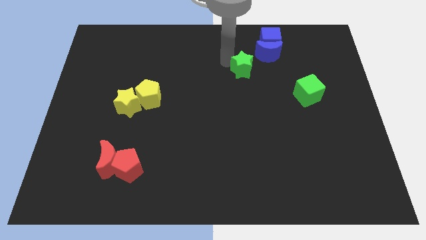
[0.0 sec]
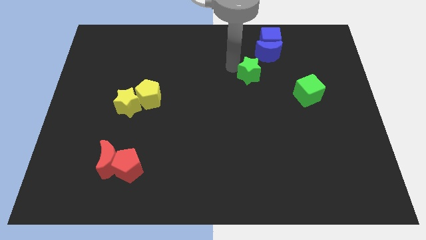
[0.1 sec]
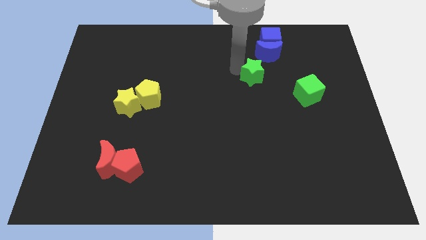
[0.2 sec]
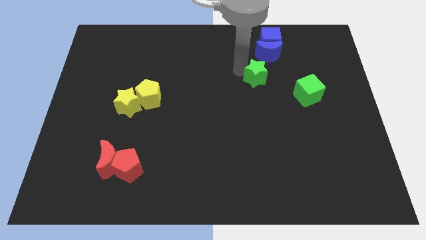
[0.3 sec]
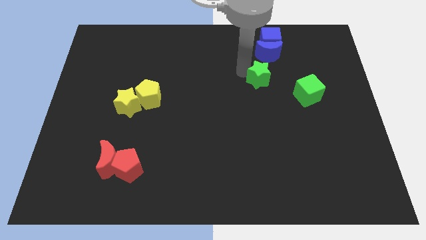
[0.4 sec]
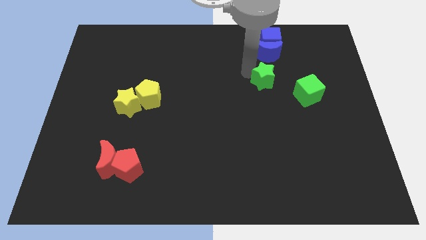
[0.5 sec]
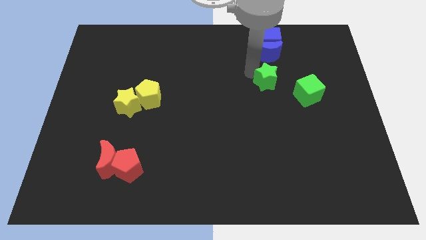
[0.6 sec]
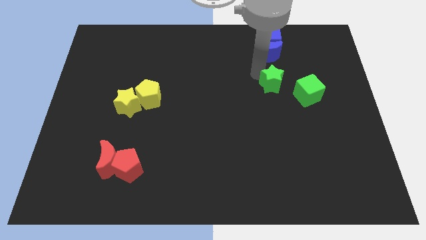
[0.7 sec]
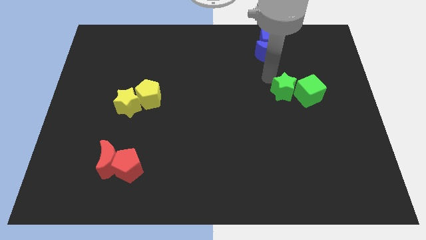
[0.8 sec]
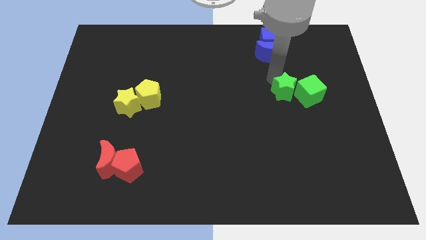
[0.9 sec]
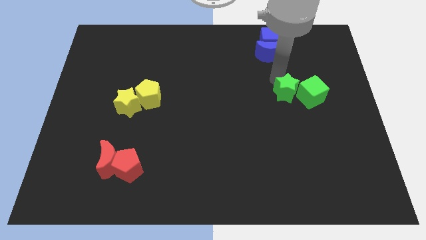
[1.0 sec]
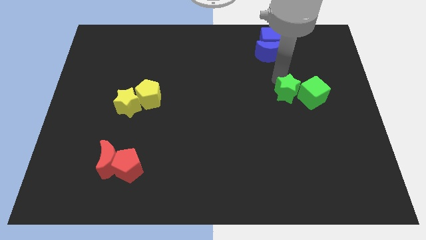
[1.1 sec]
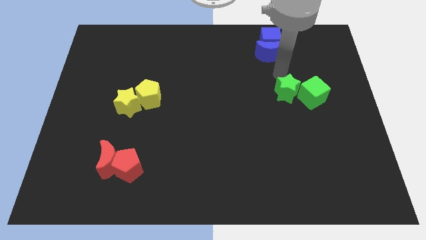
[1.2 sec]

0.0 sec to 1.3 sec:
arrange the green star at the left side of the green cube

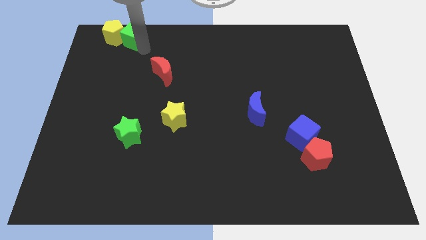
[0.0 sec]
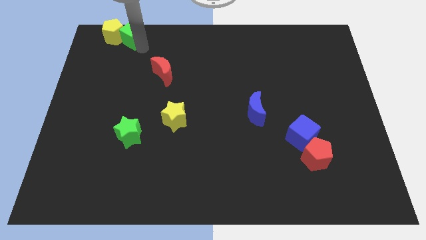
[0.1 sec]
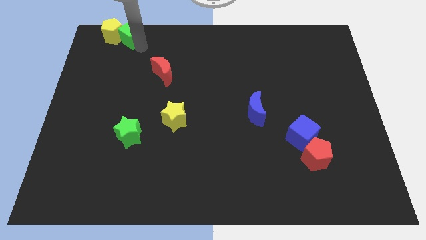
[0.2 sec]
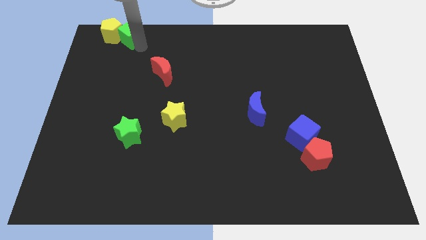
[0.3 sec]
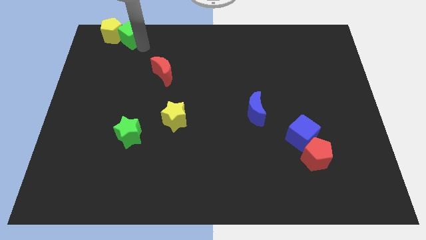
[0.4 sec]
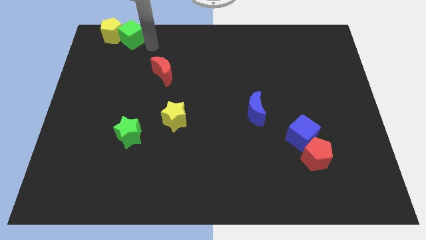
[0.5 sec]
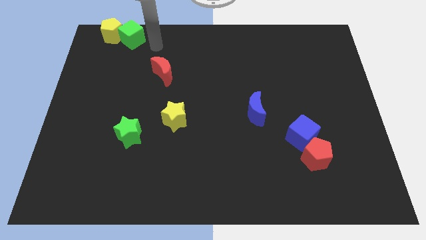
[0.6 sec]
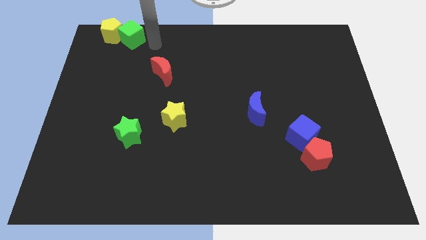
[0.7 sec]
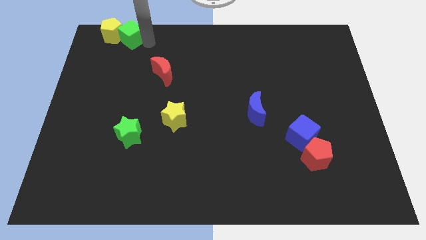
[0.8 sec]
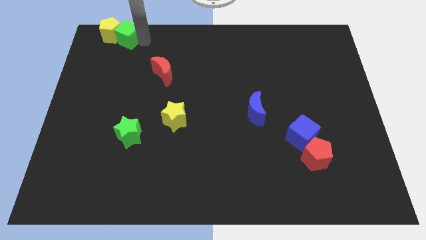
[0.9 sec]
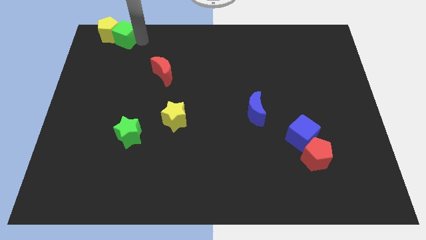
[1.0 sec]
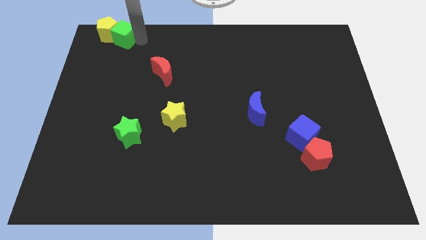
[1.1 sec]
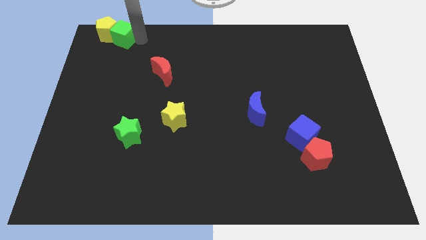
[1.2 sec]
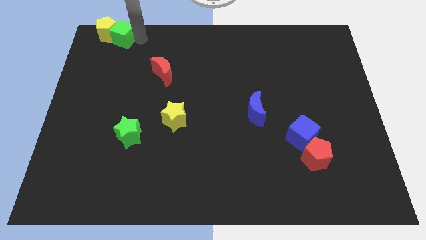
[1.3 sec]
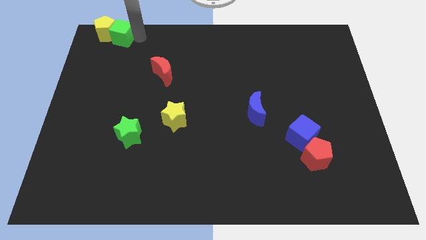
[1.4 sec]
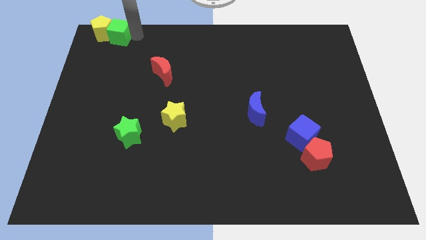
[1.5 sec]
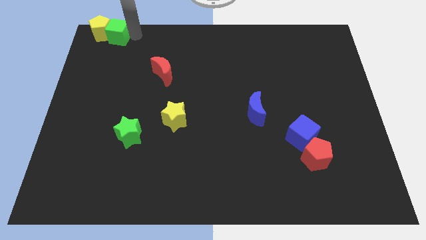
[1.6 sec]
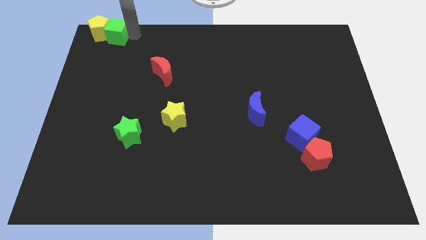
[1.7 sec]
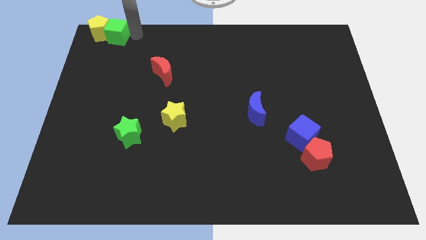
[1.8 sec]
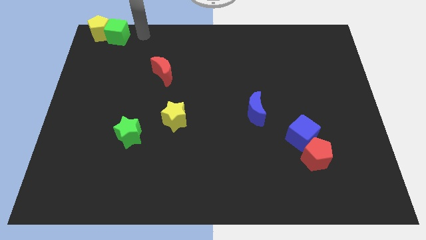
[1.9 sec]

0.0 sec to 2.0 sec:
push the yellow pentagon towards the top left corner with the green cube

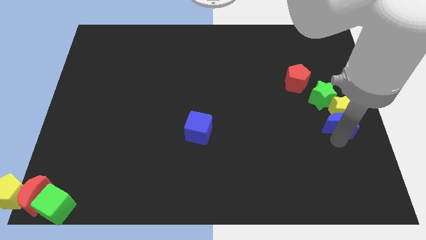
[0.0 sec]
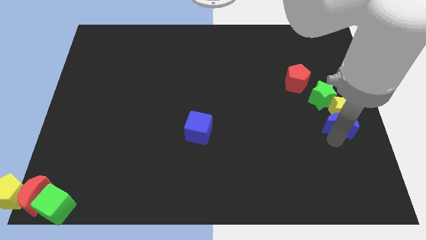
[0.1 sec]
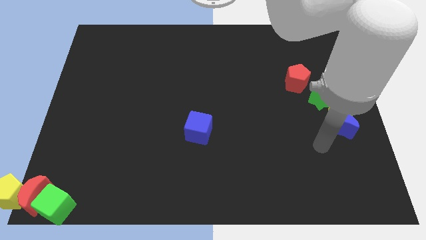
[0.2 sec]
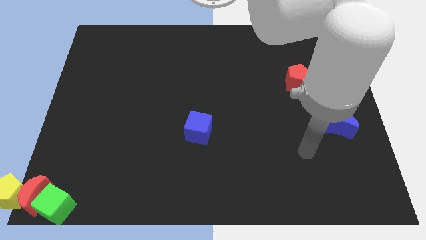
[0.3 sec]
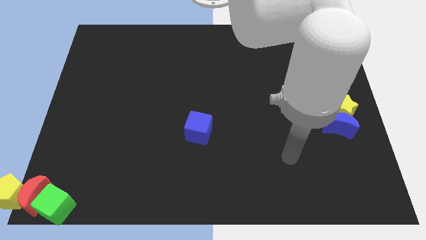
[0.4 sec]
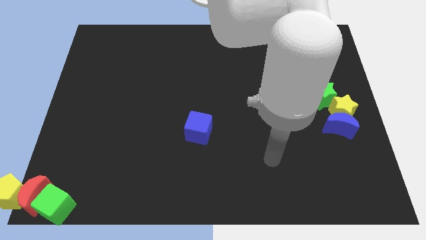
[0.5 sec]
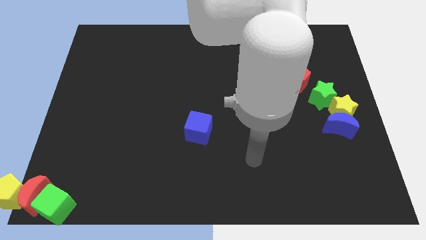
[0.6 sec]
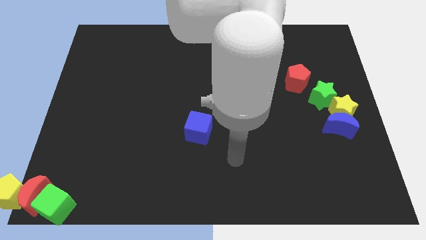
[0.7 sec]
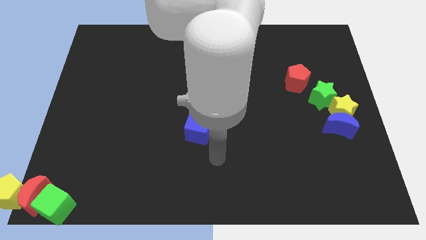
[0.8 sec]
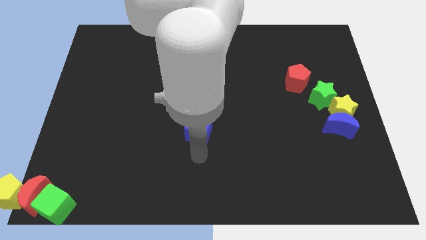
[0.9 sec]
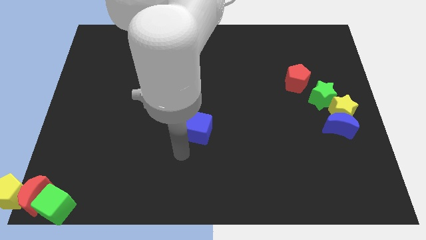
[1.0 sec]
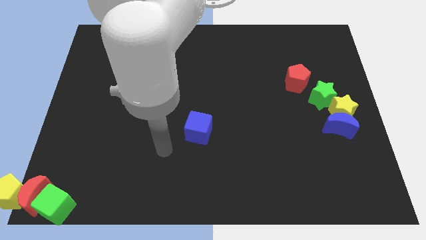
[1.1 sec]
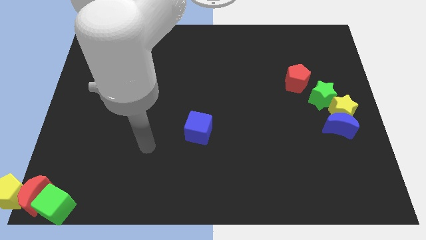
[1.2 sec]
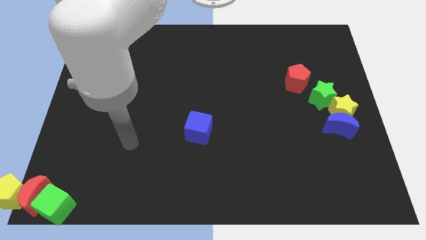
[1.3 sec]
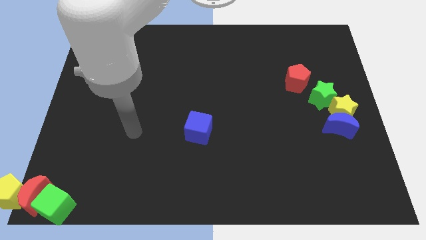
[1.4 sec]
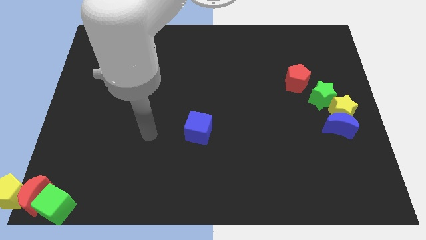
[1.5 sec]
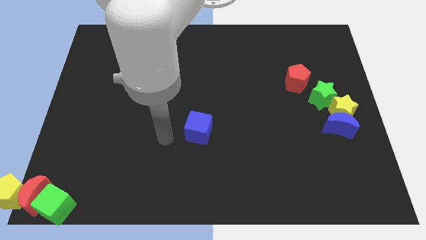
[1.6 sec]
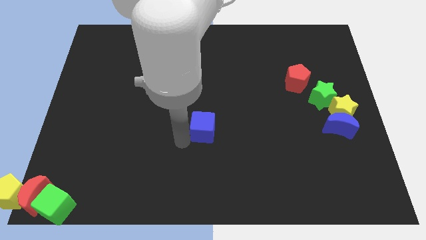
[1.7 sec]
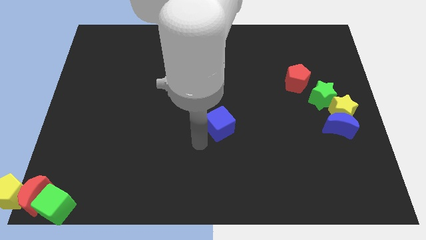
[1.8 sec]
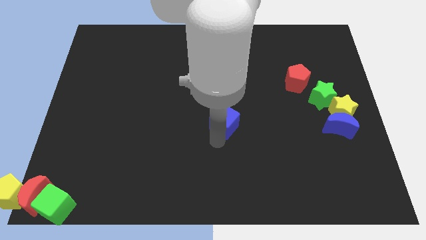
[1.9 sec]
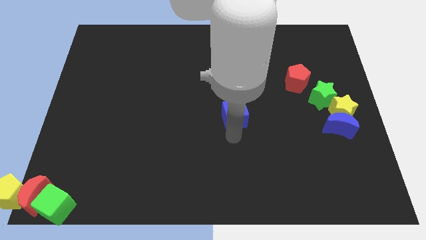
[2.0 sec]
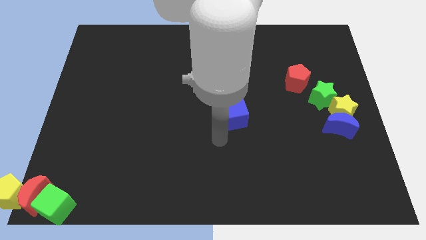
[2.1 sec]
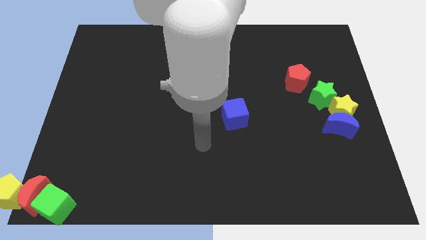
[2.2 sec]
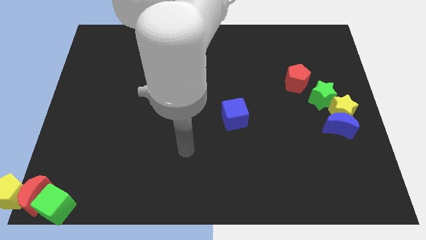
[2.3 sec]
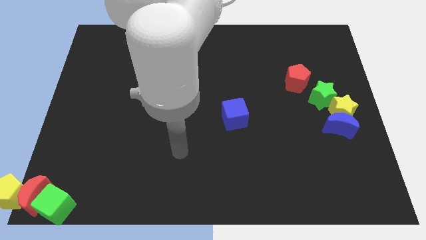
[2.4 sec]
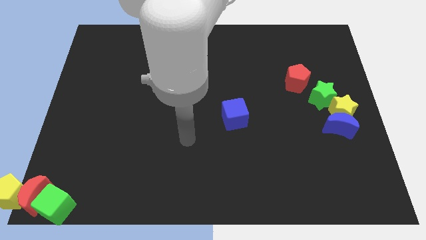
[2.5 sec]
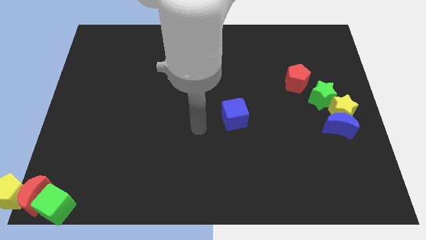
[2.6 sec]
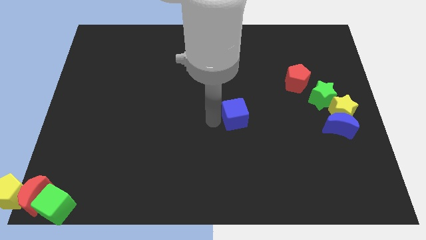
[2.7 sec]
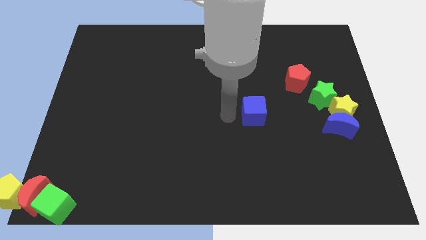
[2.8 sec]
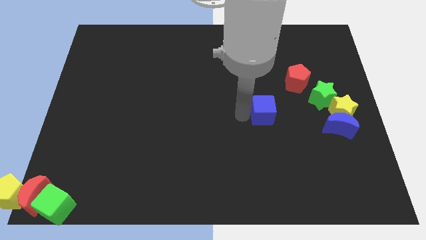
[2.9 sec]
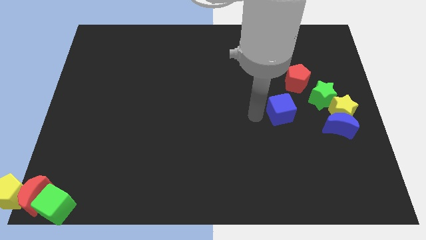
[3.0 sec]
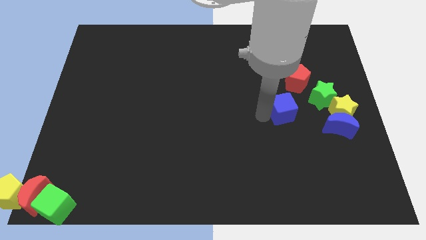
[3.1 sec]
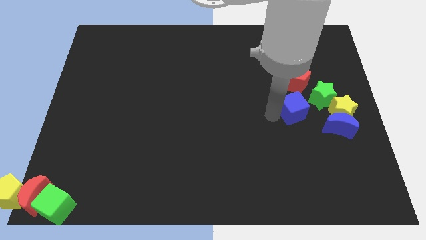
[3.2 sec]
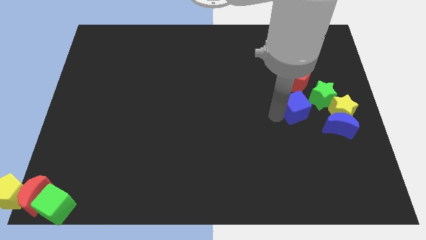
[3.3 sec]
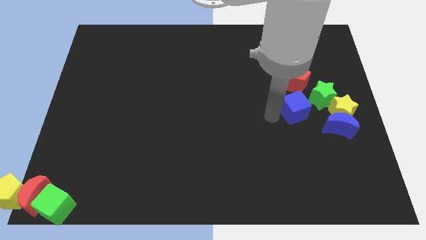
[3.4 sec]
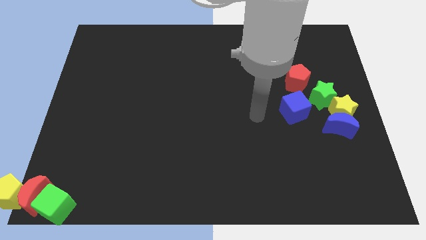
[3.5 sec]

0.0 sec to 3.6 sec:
move the blue cube to the bottom of the red pentagon

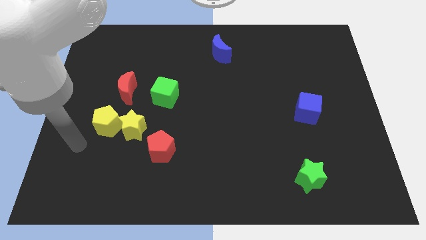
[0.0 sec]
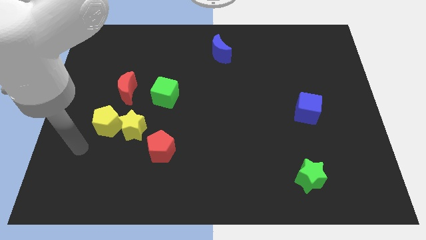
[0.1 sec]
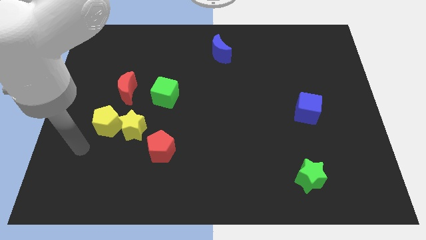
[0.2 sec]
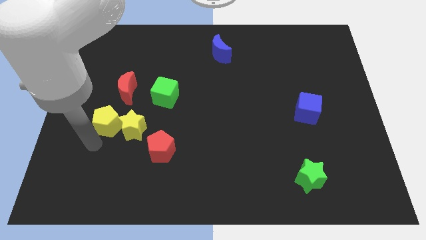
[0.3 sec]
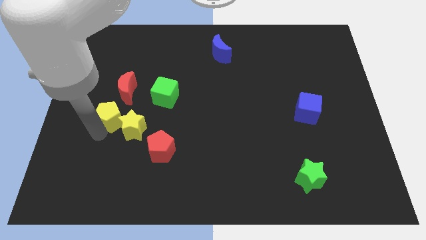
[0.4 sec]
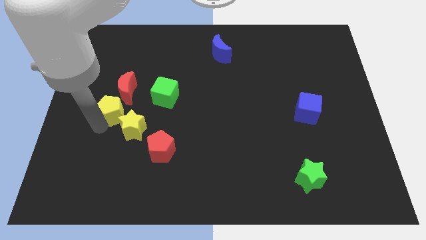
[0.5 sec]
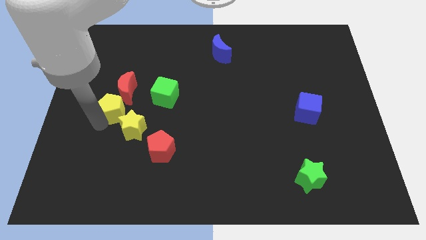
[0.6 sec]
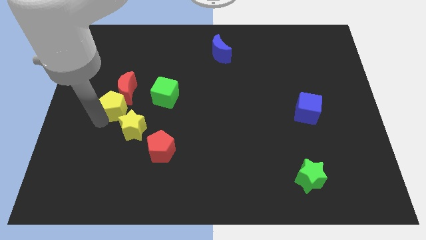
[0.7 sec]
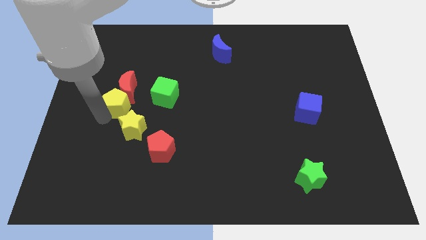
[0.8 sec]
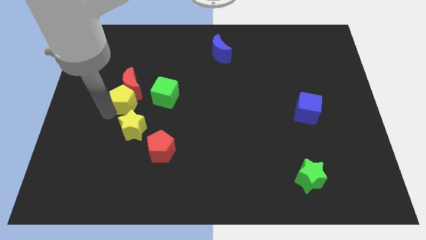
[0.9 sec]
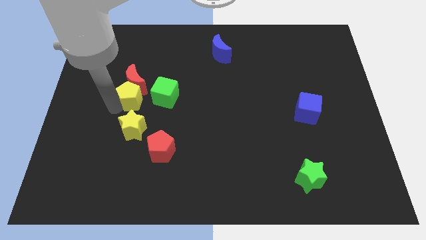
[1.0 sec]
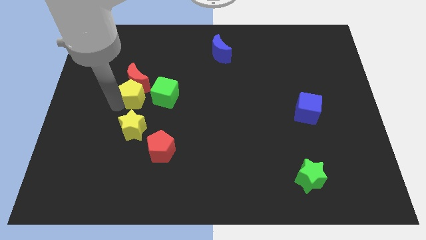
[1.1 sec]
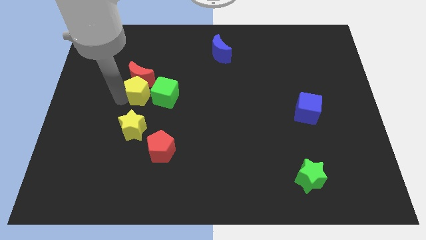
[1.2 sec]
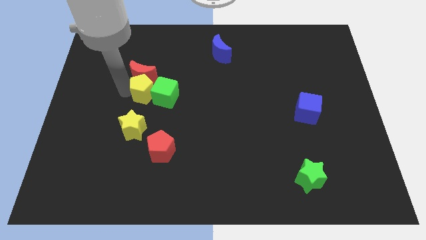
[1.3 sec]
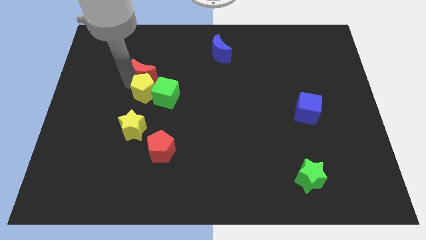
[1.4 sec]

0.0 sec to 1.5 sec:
move yellow pentagon into the red moon

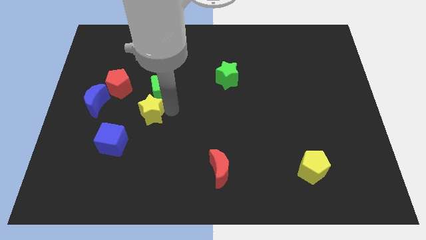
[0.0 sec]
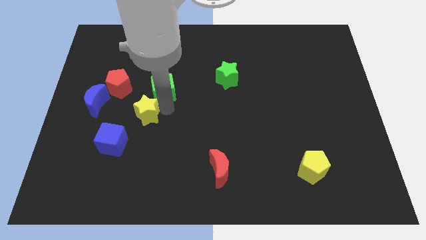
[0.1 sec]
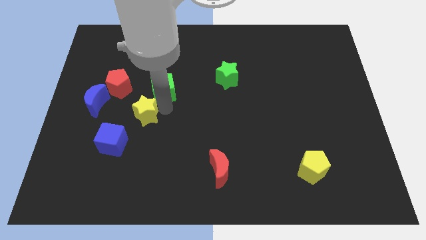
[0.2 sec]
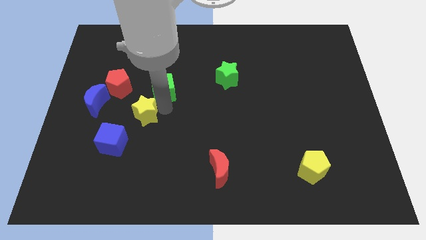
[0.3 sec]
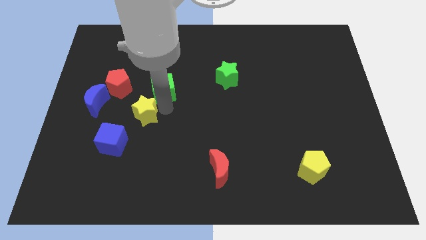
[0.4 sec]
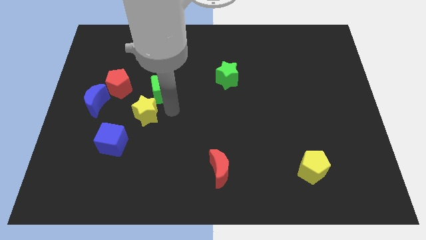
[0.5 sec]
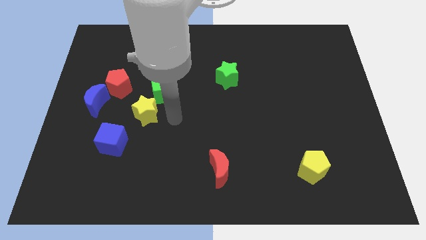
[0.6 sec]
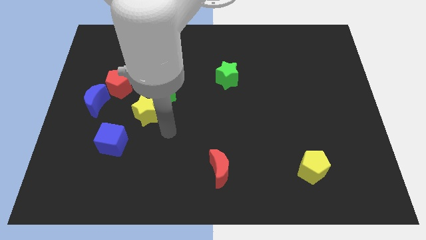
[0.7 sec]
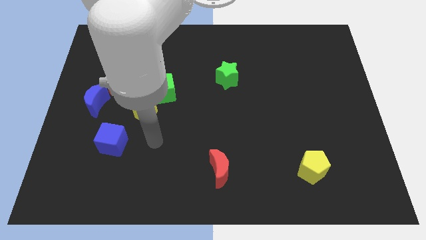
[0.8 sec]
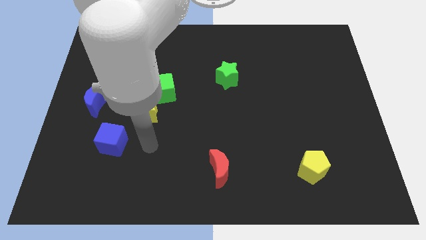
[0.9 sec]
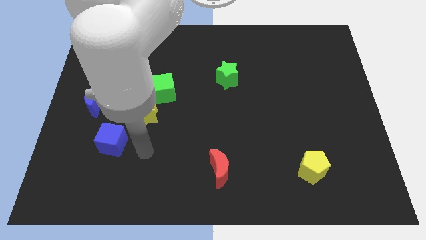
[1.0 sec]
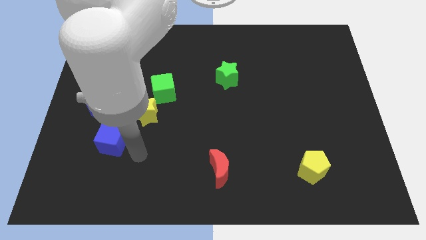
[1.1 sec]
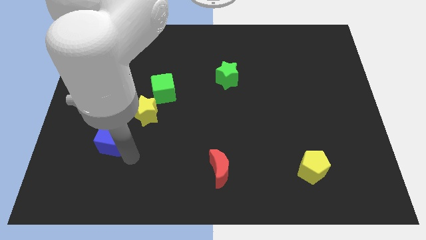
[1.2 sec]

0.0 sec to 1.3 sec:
push yellow star to the left
